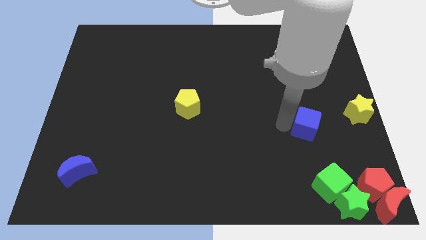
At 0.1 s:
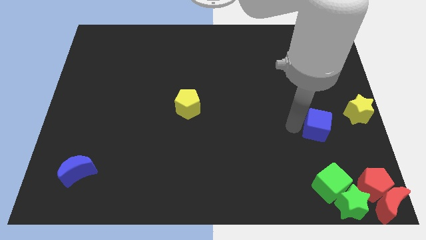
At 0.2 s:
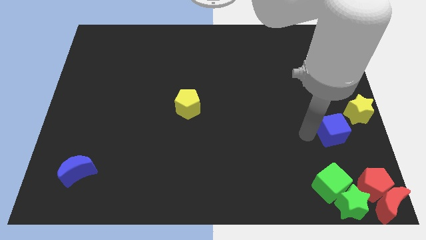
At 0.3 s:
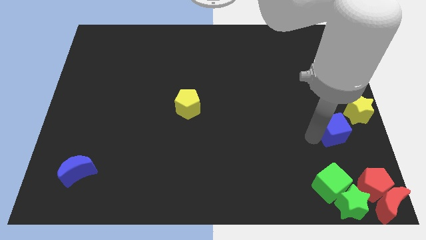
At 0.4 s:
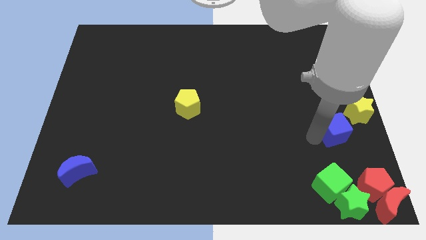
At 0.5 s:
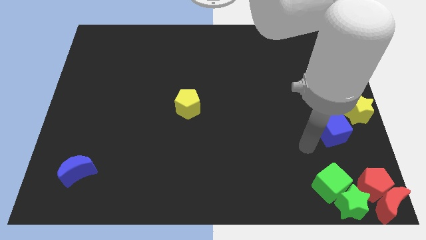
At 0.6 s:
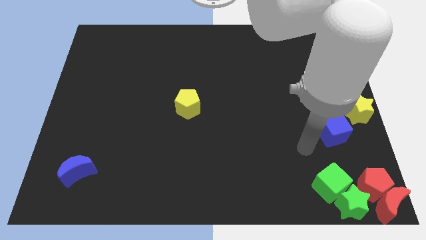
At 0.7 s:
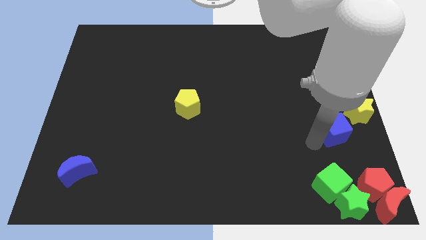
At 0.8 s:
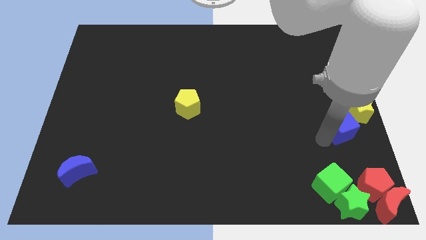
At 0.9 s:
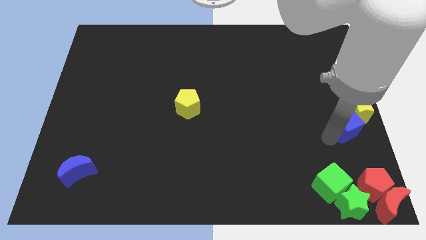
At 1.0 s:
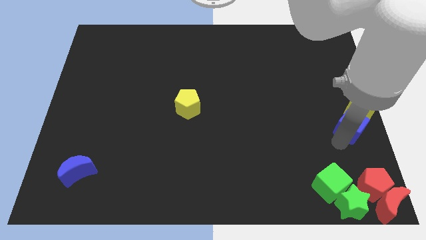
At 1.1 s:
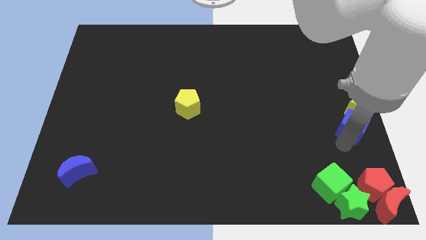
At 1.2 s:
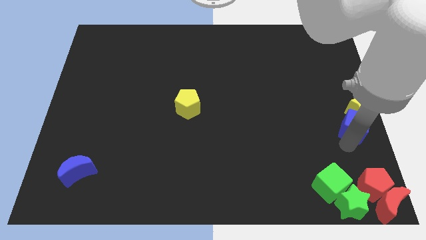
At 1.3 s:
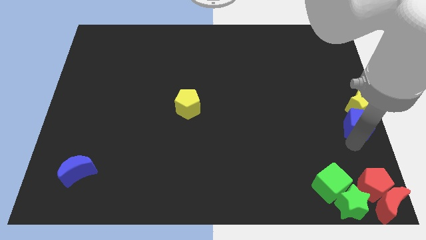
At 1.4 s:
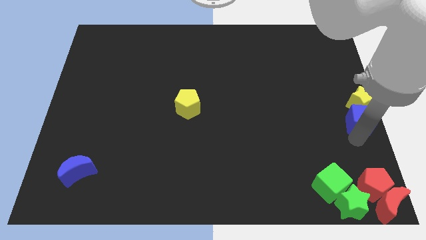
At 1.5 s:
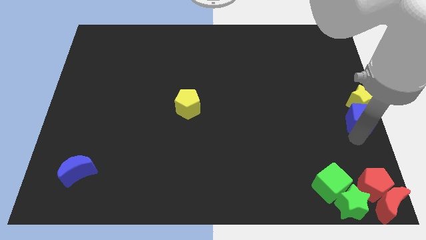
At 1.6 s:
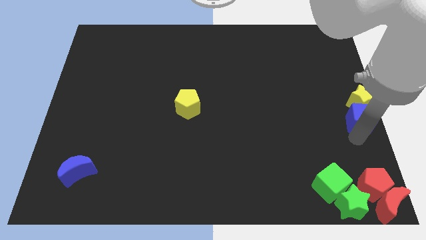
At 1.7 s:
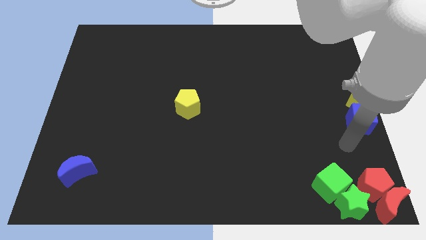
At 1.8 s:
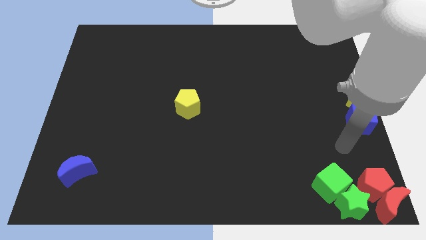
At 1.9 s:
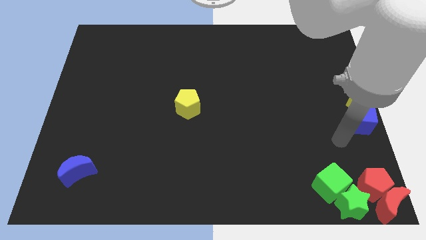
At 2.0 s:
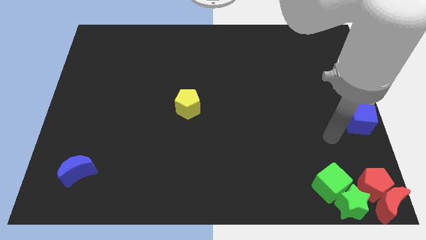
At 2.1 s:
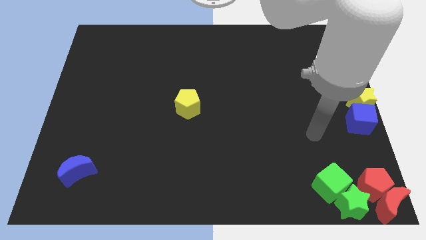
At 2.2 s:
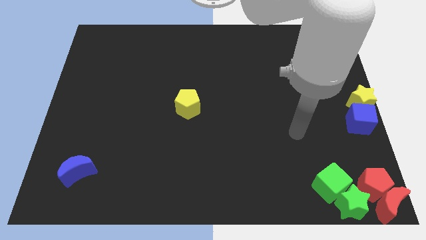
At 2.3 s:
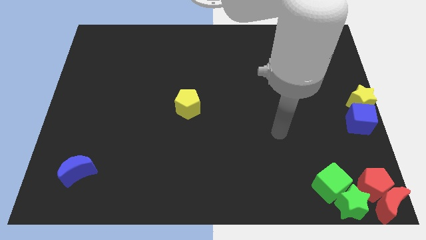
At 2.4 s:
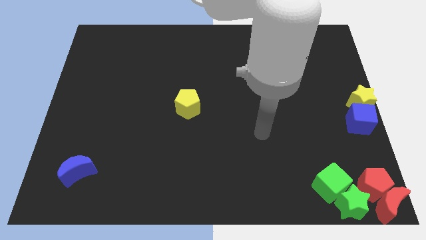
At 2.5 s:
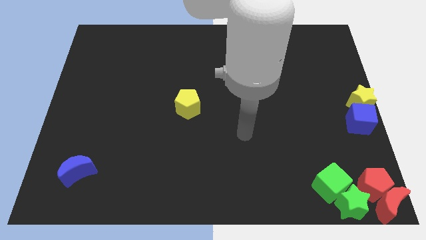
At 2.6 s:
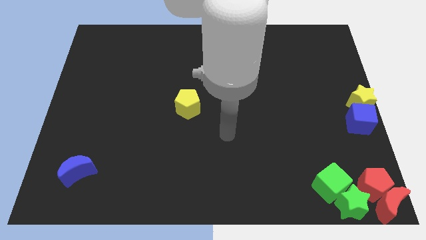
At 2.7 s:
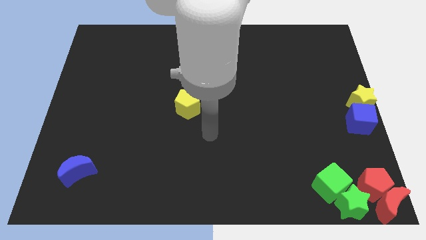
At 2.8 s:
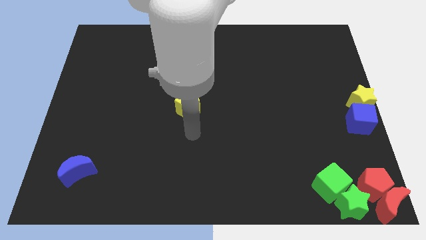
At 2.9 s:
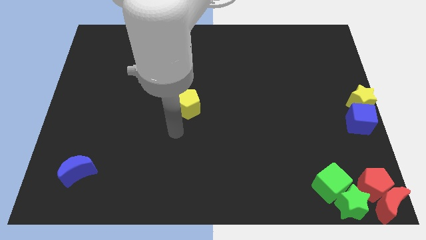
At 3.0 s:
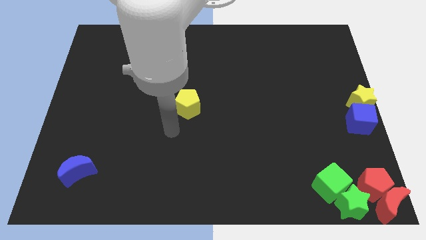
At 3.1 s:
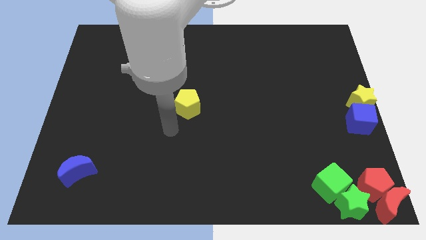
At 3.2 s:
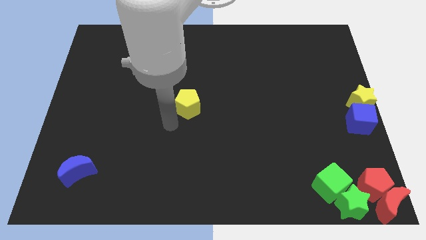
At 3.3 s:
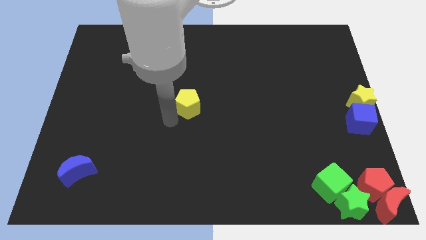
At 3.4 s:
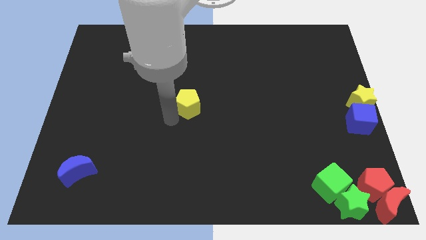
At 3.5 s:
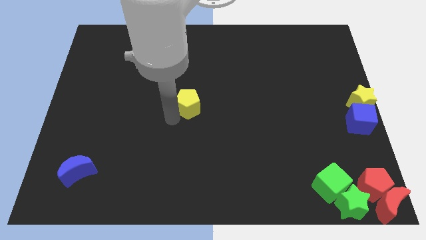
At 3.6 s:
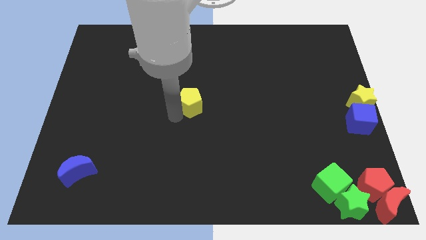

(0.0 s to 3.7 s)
put the blue cube at the bottom of the yellow star

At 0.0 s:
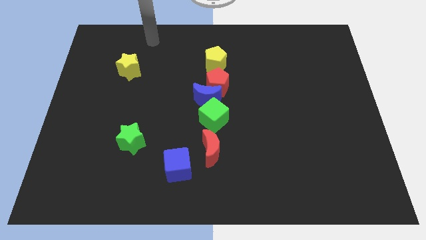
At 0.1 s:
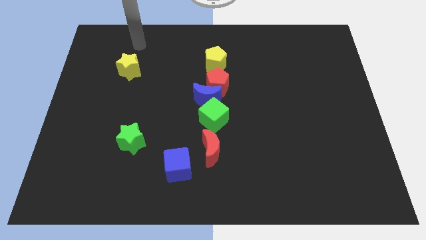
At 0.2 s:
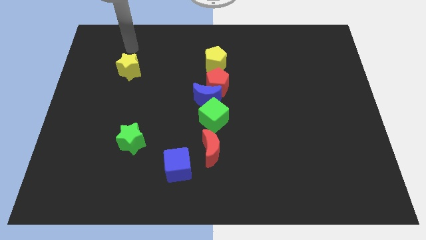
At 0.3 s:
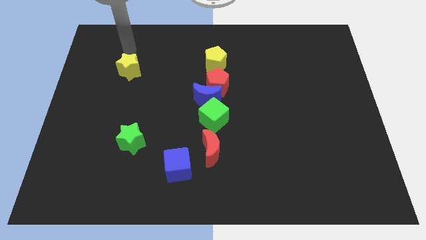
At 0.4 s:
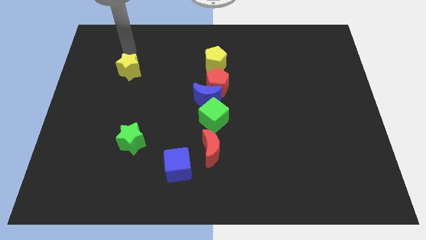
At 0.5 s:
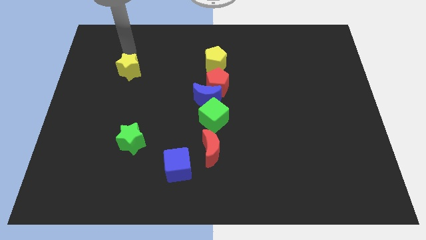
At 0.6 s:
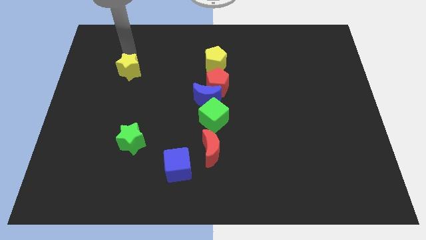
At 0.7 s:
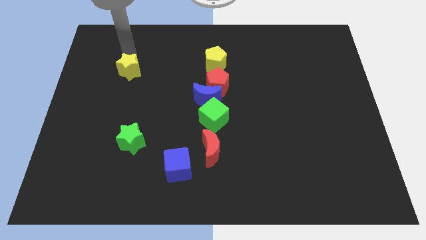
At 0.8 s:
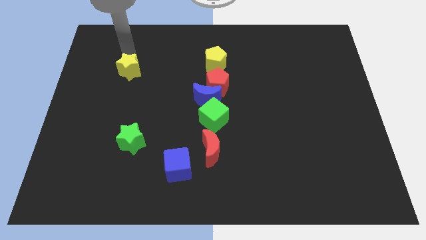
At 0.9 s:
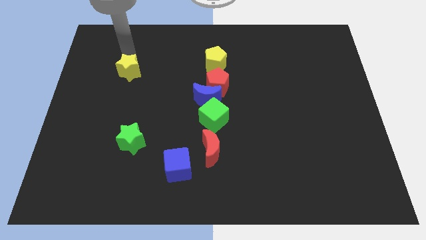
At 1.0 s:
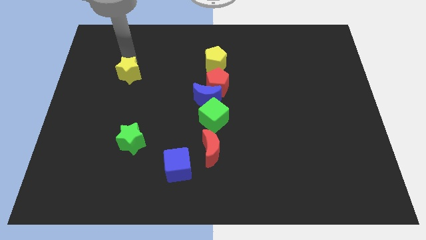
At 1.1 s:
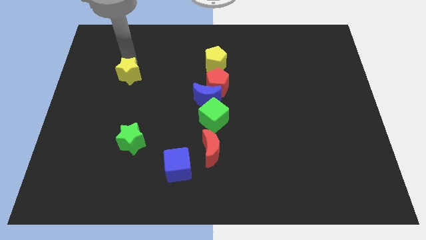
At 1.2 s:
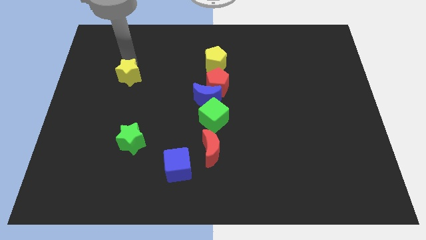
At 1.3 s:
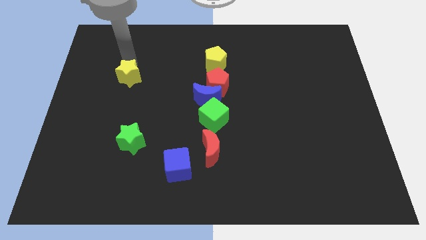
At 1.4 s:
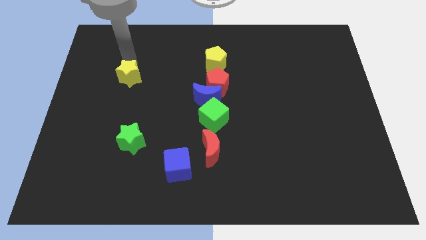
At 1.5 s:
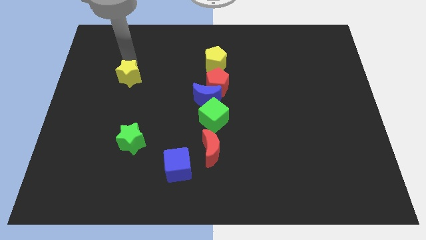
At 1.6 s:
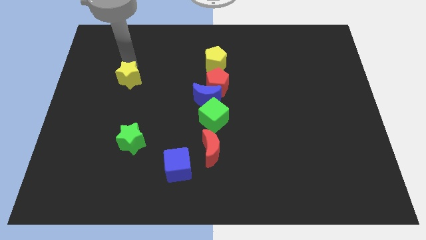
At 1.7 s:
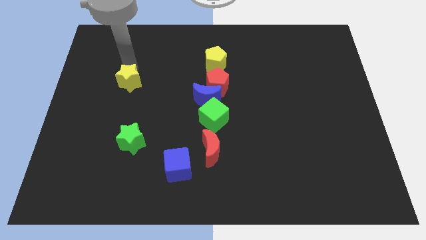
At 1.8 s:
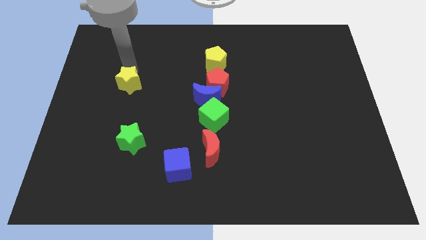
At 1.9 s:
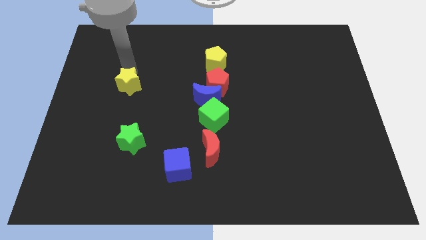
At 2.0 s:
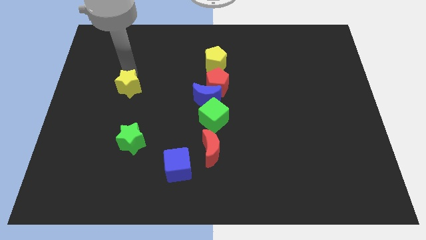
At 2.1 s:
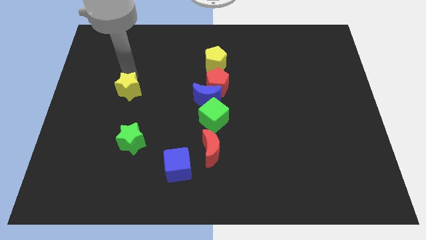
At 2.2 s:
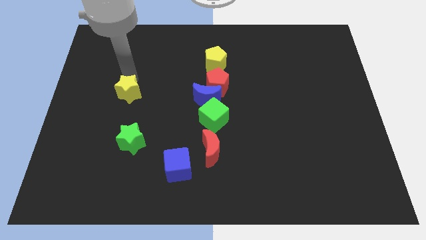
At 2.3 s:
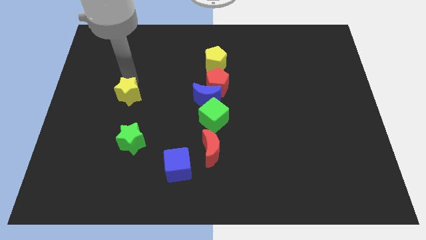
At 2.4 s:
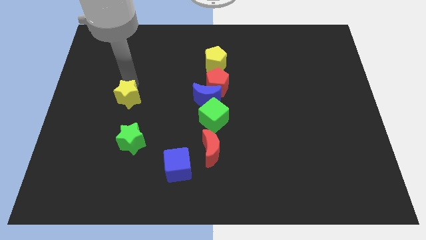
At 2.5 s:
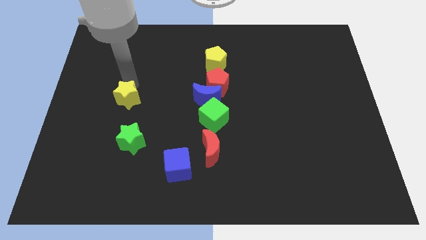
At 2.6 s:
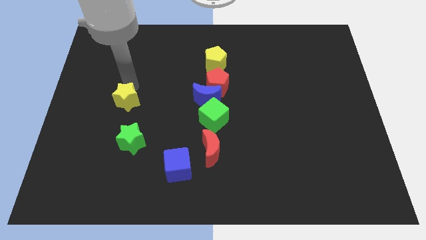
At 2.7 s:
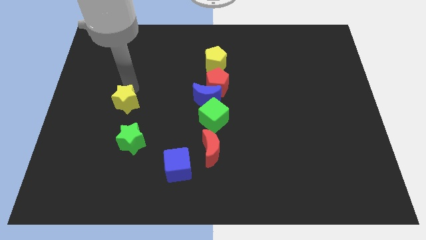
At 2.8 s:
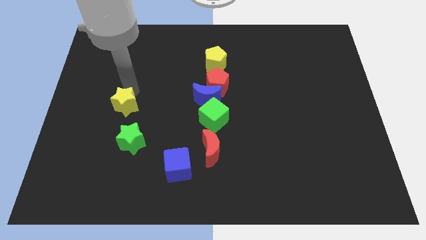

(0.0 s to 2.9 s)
push yellow star down wards

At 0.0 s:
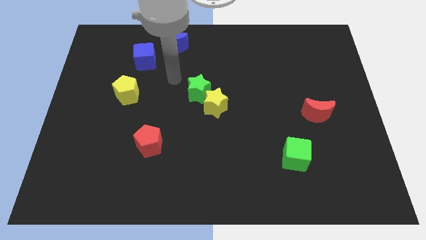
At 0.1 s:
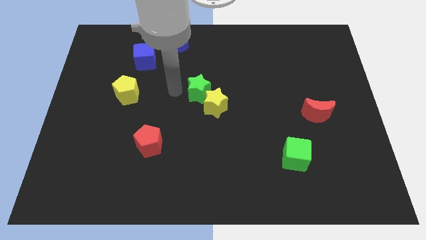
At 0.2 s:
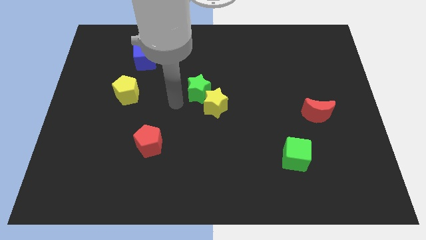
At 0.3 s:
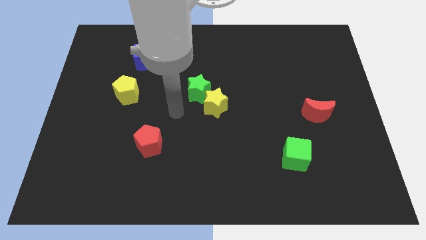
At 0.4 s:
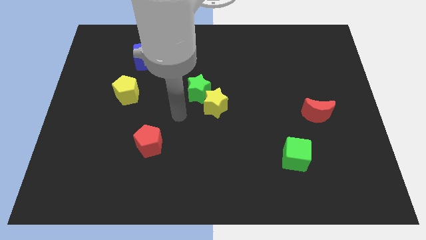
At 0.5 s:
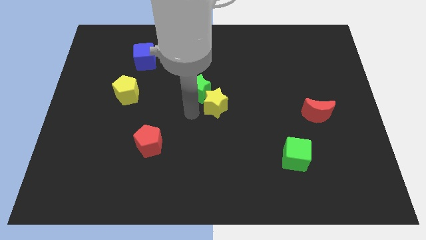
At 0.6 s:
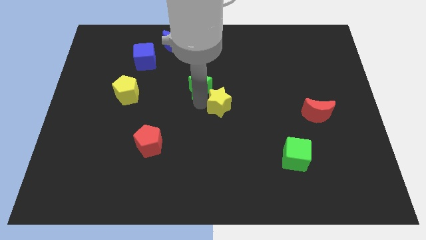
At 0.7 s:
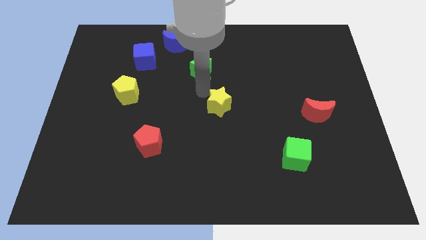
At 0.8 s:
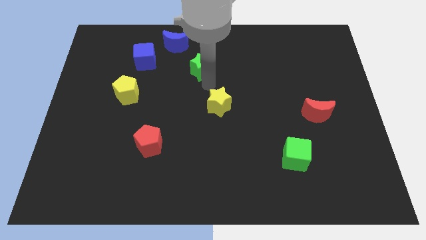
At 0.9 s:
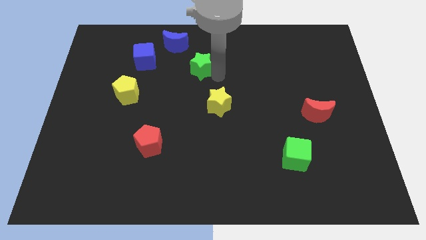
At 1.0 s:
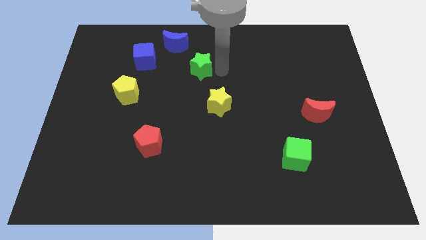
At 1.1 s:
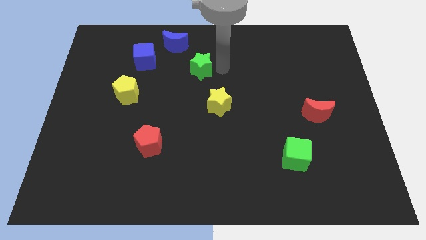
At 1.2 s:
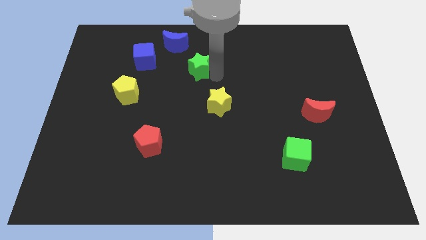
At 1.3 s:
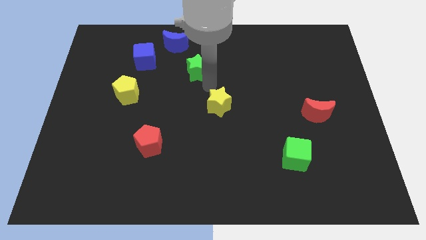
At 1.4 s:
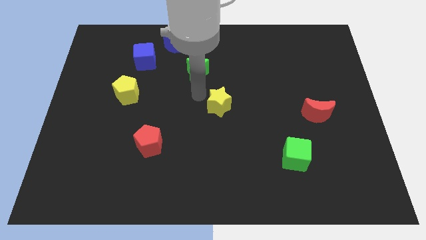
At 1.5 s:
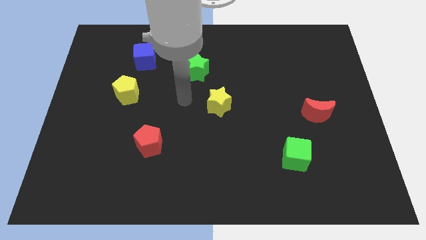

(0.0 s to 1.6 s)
move green star slightly towards upside

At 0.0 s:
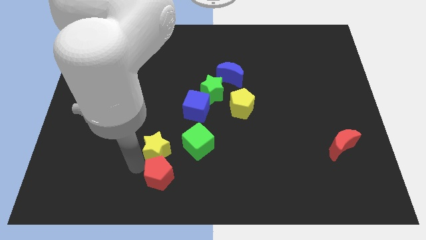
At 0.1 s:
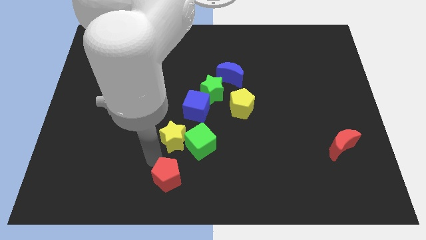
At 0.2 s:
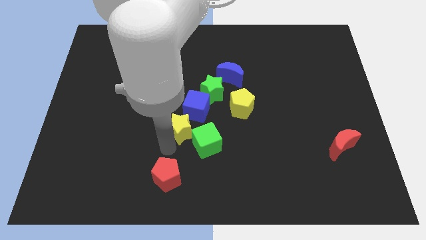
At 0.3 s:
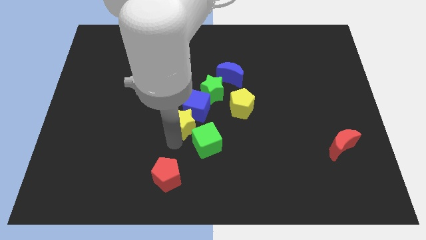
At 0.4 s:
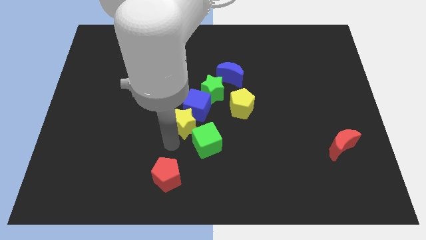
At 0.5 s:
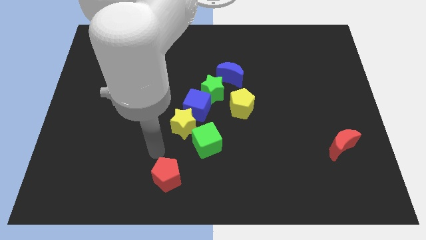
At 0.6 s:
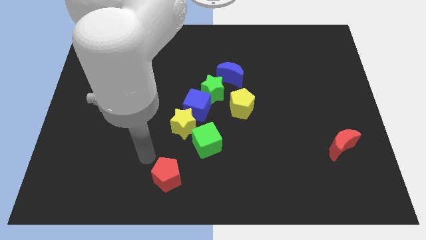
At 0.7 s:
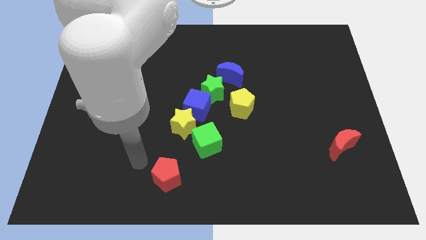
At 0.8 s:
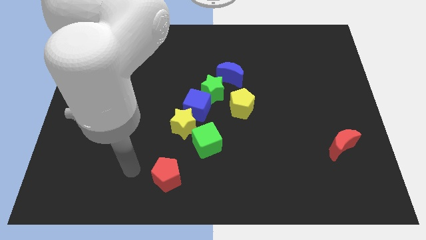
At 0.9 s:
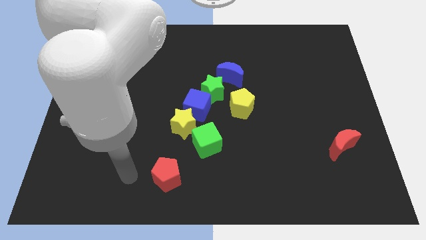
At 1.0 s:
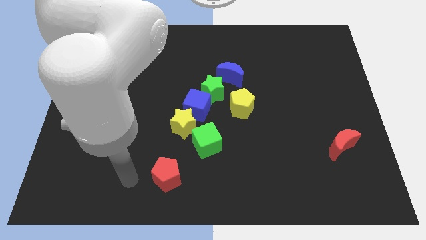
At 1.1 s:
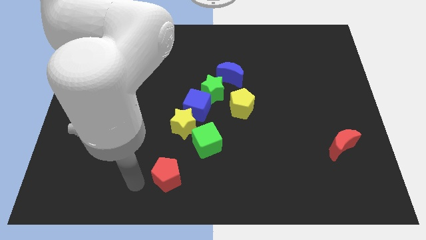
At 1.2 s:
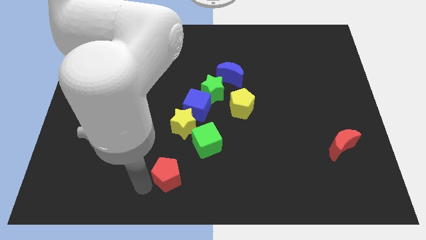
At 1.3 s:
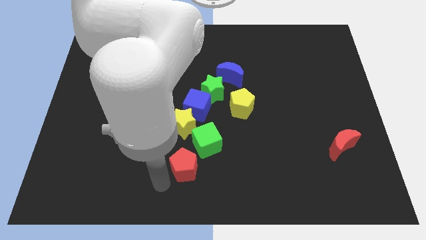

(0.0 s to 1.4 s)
push the yellow star close to the blue cube
